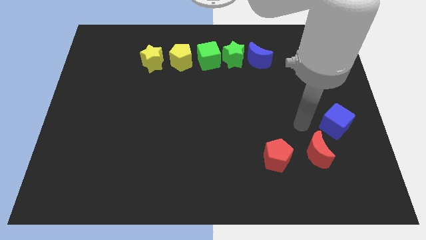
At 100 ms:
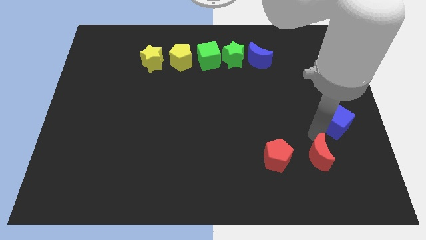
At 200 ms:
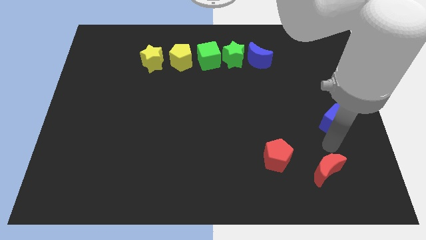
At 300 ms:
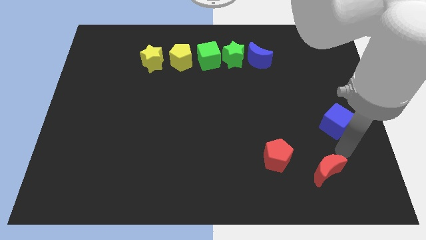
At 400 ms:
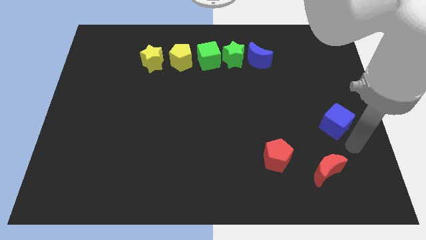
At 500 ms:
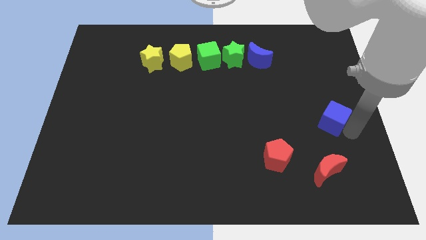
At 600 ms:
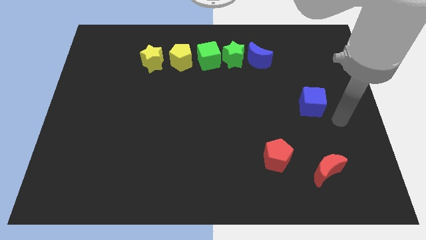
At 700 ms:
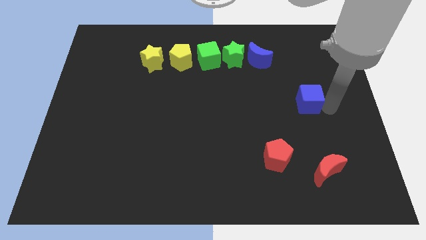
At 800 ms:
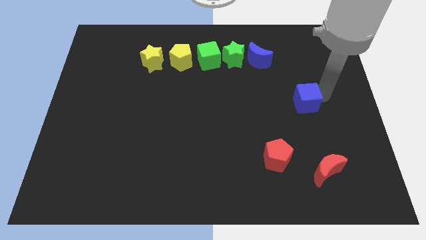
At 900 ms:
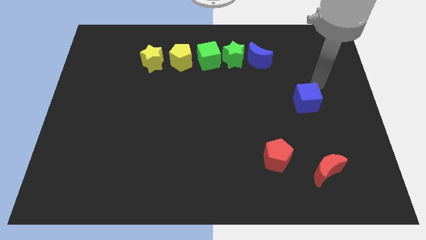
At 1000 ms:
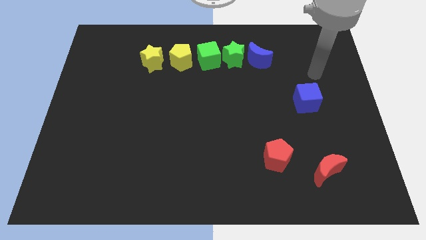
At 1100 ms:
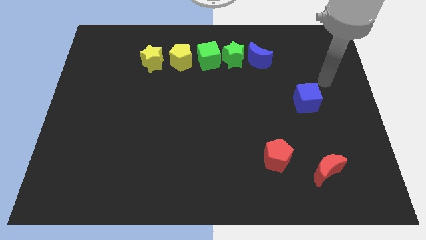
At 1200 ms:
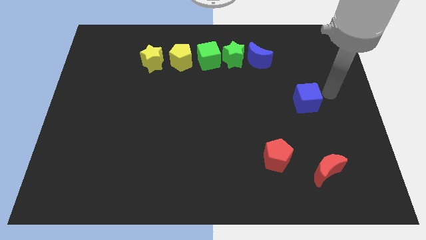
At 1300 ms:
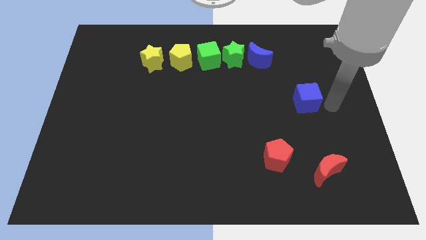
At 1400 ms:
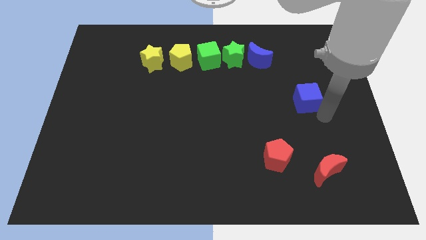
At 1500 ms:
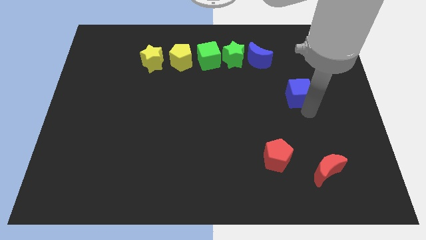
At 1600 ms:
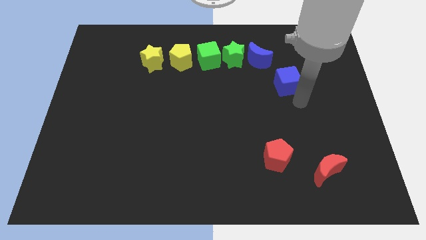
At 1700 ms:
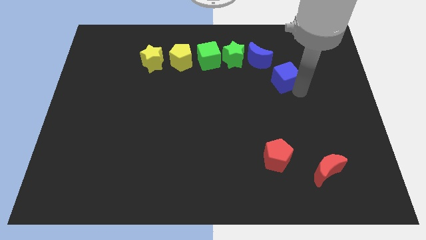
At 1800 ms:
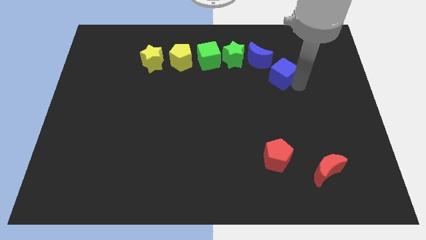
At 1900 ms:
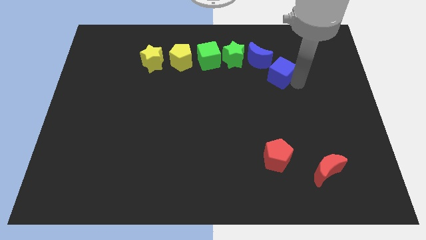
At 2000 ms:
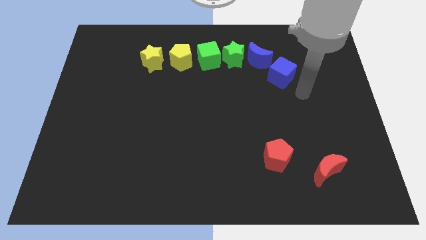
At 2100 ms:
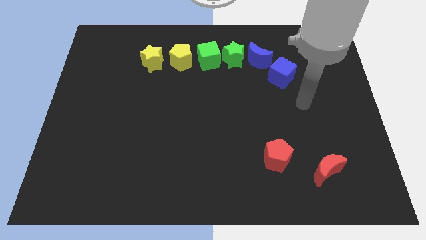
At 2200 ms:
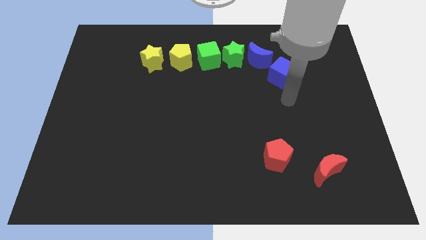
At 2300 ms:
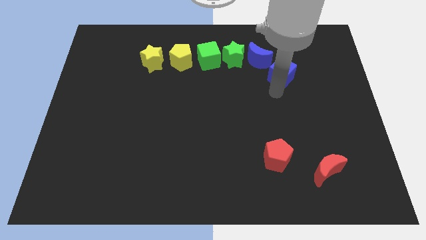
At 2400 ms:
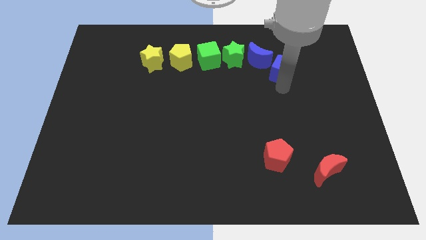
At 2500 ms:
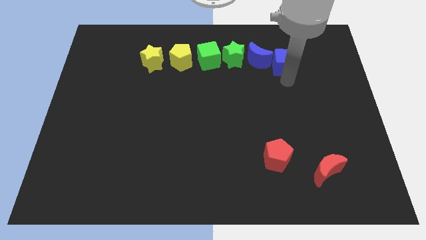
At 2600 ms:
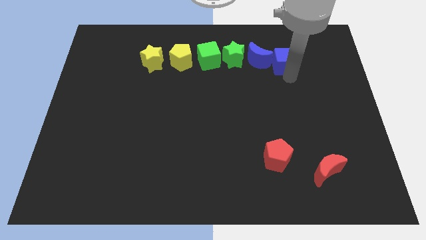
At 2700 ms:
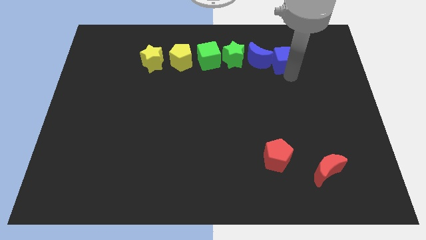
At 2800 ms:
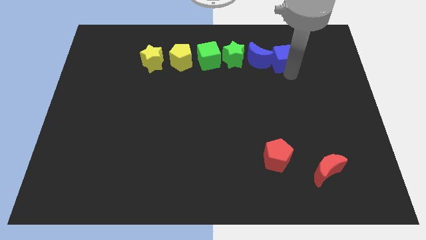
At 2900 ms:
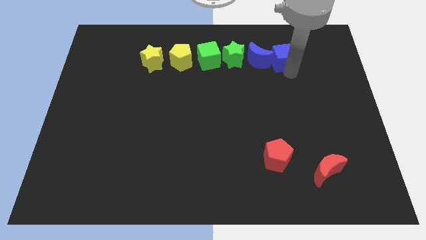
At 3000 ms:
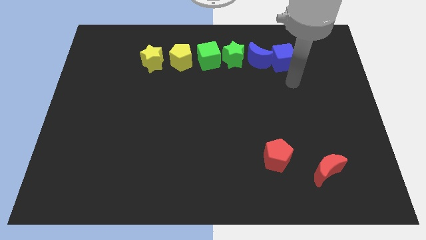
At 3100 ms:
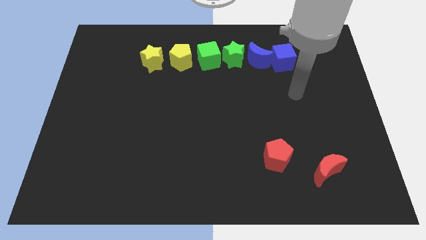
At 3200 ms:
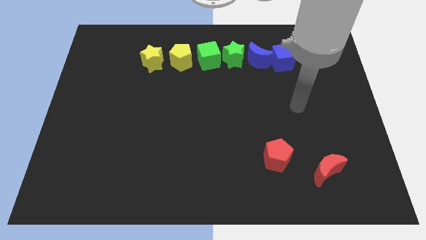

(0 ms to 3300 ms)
push the blue cube into the right of the blue moon

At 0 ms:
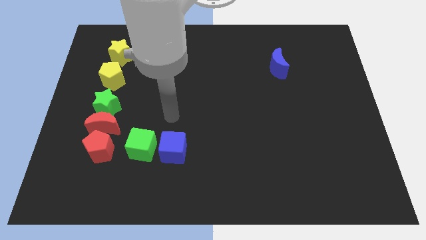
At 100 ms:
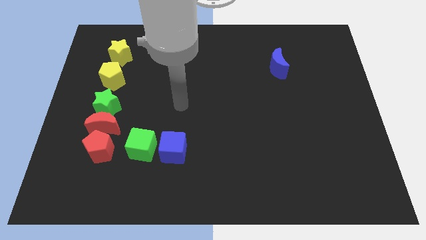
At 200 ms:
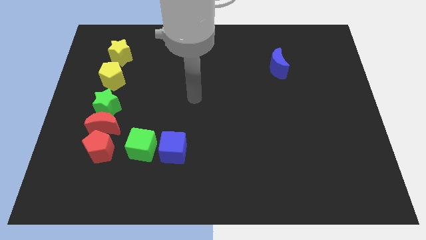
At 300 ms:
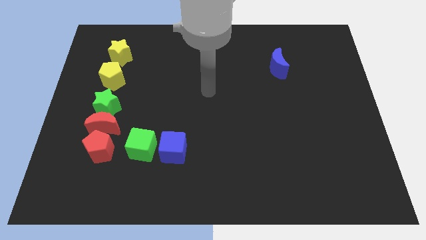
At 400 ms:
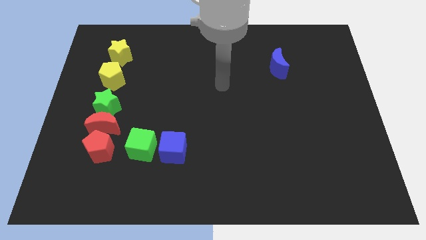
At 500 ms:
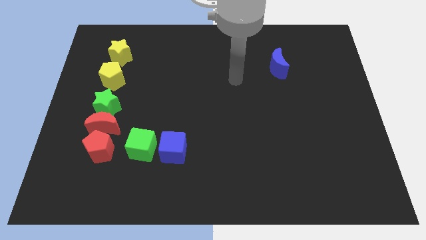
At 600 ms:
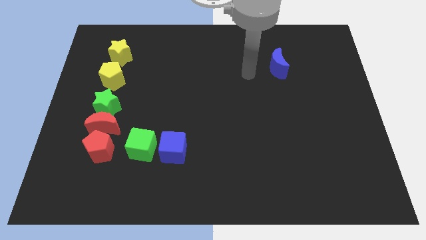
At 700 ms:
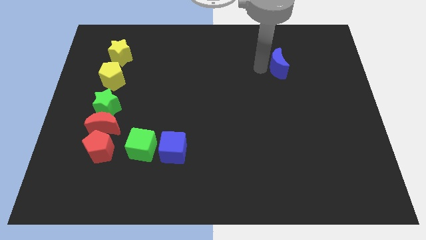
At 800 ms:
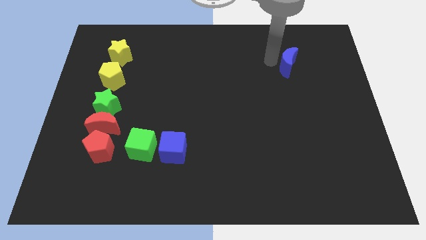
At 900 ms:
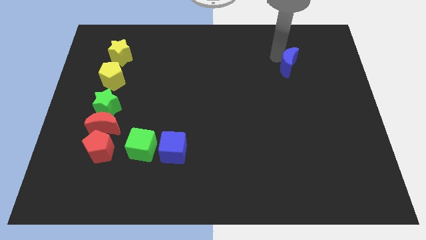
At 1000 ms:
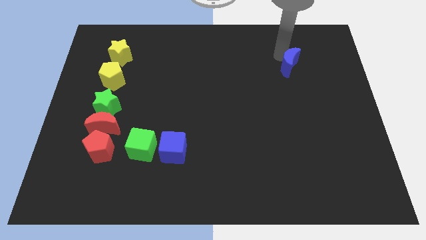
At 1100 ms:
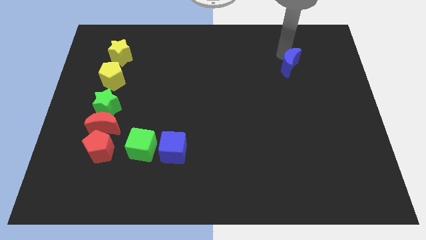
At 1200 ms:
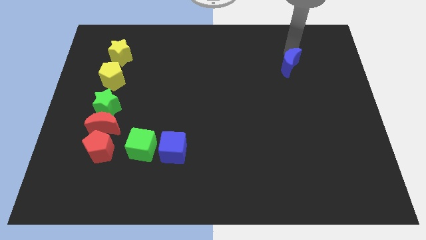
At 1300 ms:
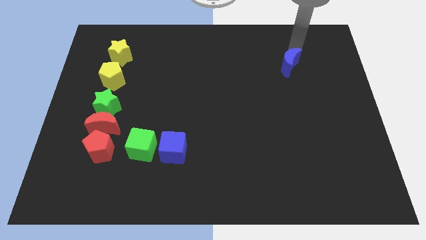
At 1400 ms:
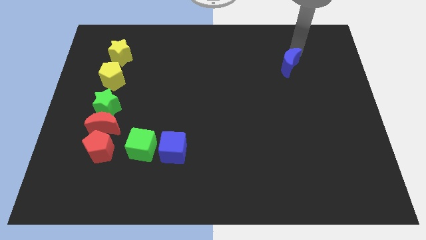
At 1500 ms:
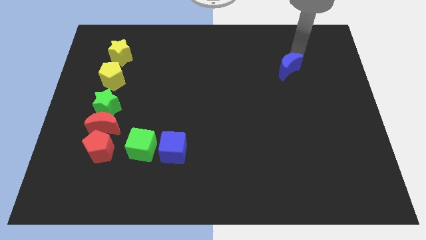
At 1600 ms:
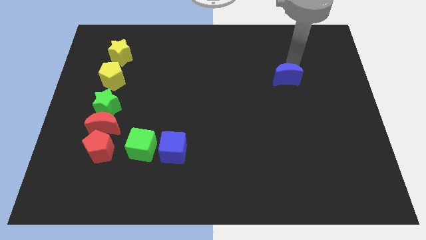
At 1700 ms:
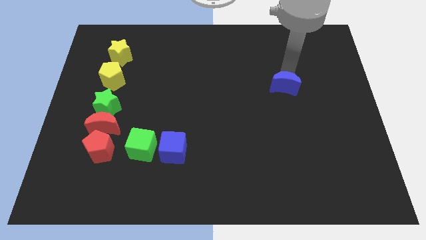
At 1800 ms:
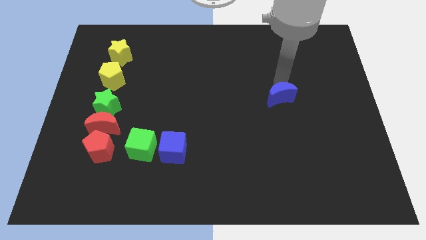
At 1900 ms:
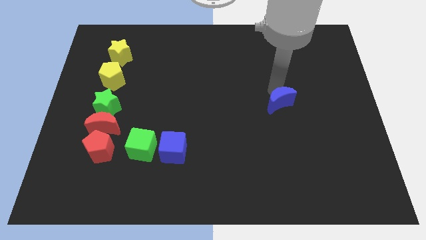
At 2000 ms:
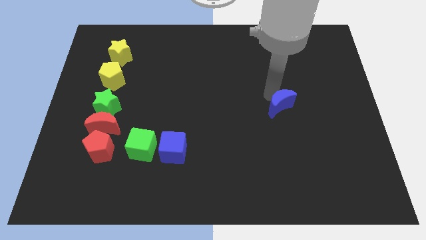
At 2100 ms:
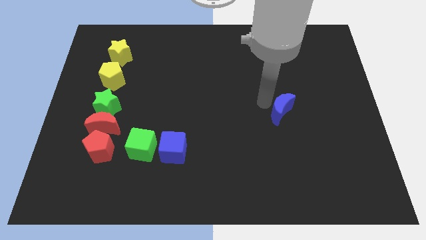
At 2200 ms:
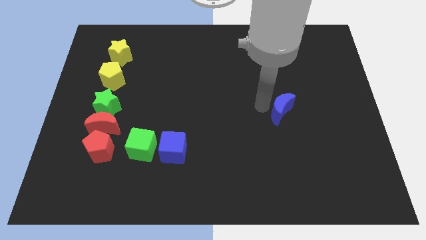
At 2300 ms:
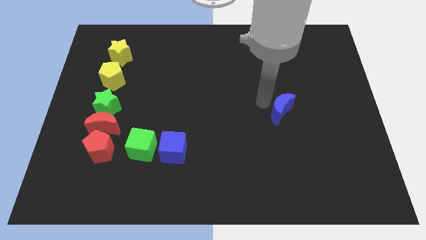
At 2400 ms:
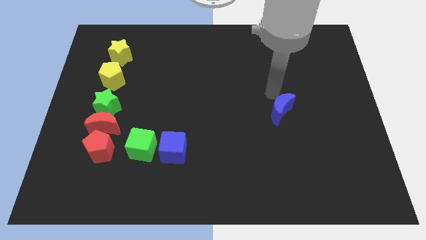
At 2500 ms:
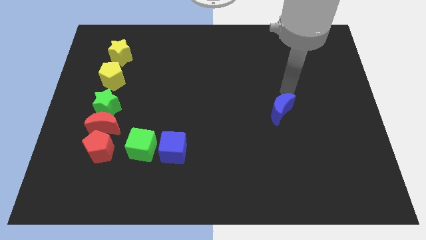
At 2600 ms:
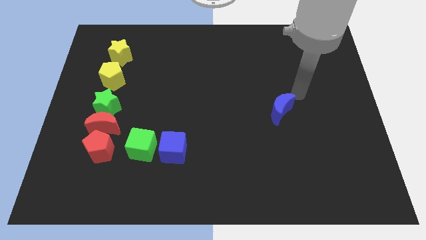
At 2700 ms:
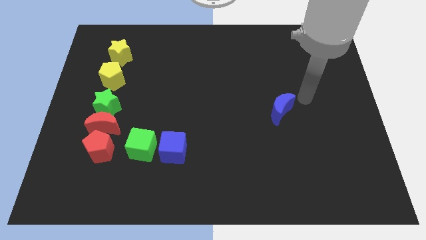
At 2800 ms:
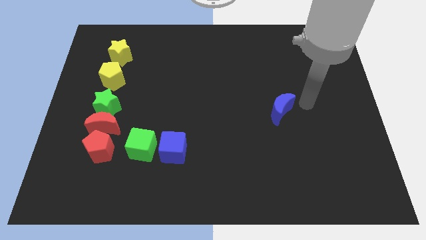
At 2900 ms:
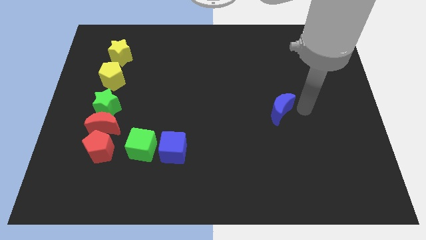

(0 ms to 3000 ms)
move your arm close to the blue moon

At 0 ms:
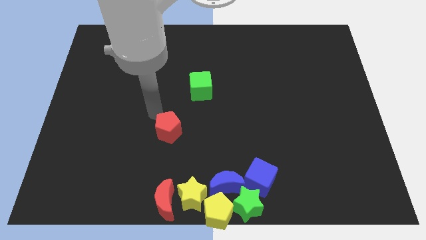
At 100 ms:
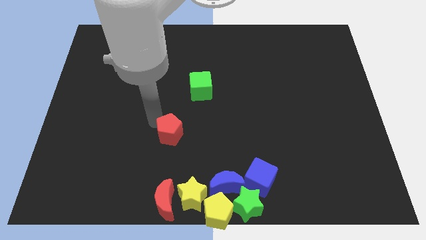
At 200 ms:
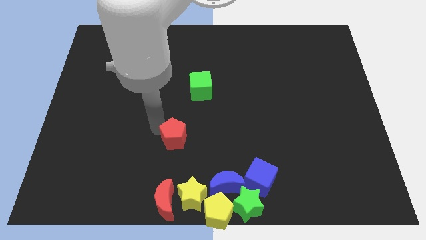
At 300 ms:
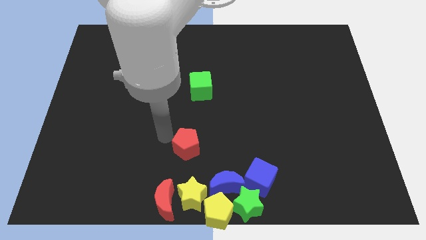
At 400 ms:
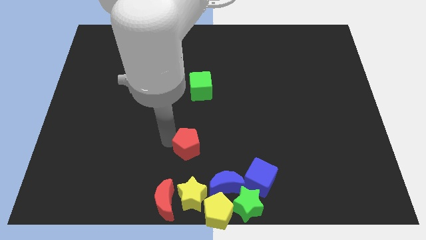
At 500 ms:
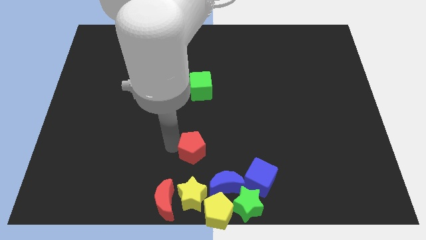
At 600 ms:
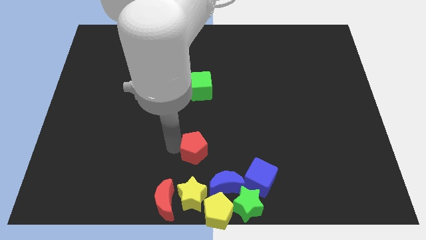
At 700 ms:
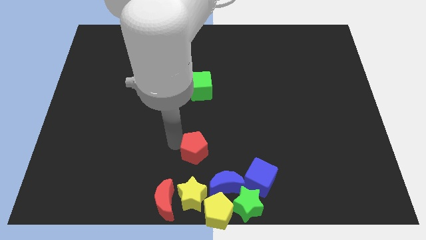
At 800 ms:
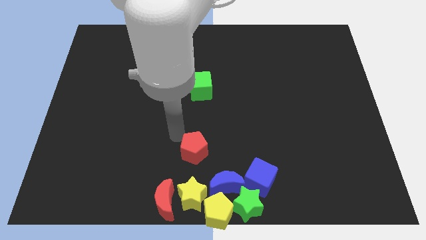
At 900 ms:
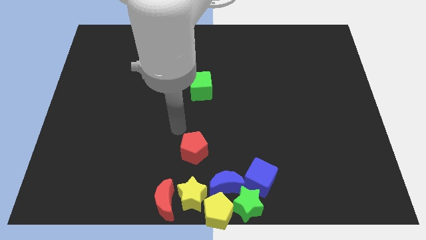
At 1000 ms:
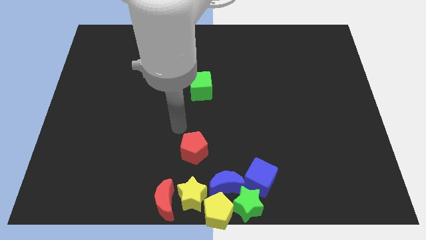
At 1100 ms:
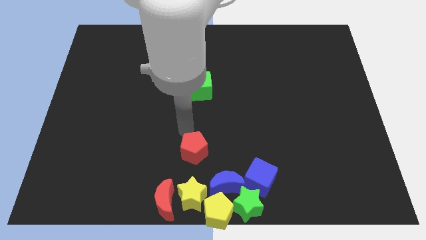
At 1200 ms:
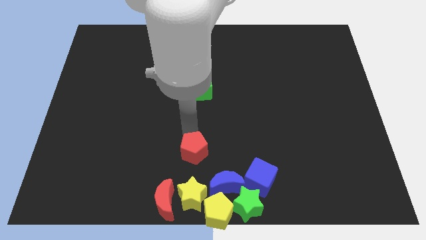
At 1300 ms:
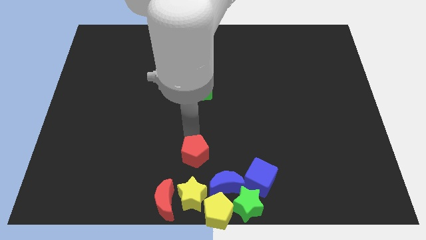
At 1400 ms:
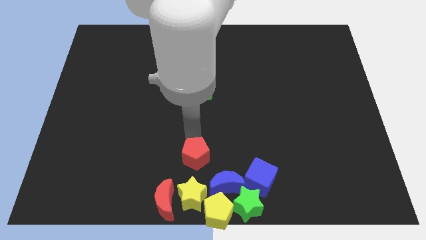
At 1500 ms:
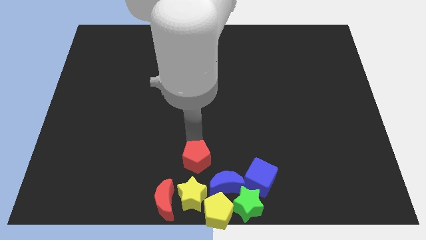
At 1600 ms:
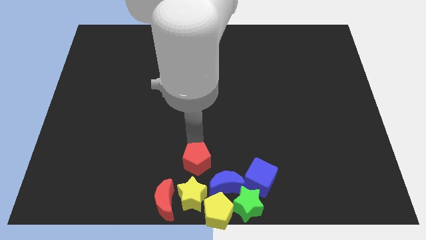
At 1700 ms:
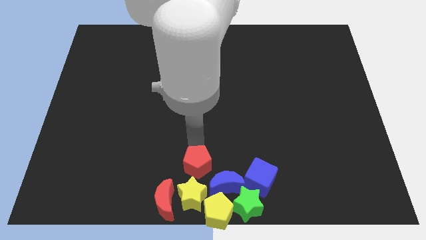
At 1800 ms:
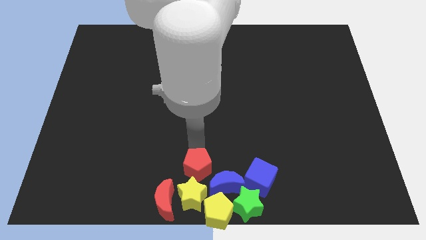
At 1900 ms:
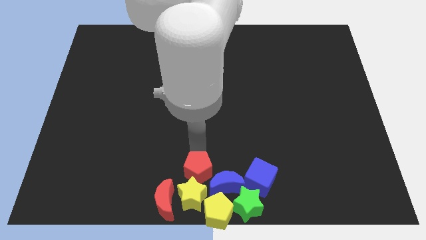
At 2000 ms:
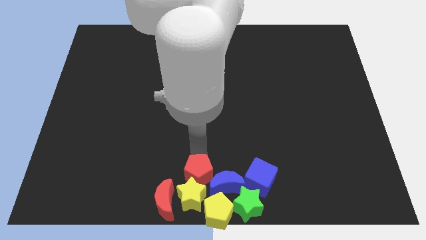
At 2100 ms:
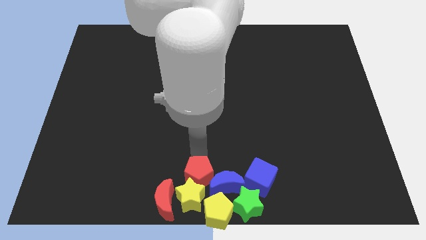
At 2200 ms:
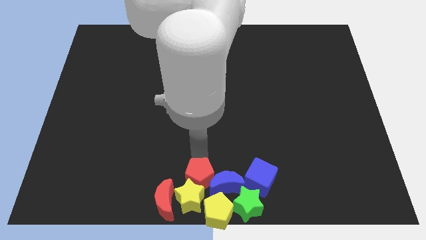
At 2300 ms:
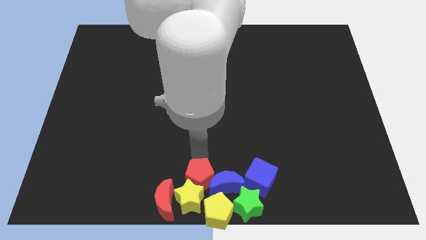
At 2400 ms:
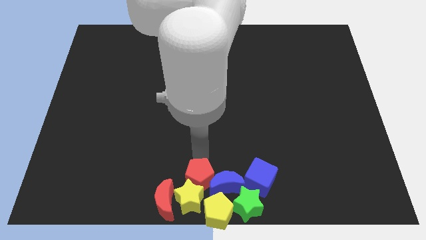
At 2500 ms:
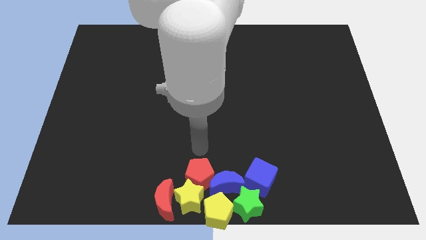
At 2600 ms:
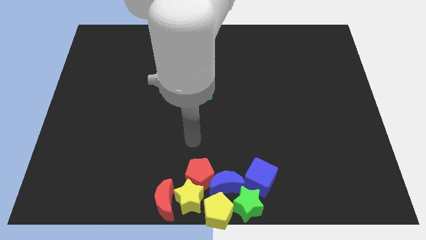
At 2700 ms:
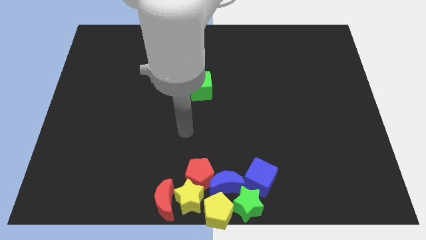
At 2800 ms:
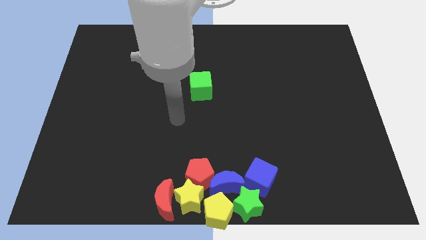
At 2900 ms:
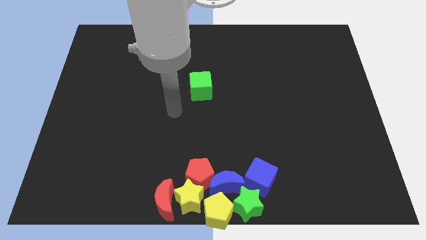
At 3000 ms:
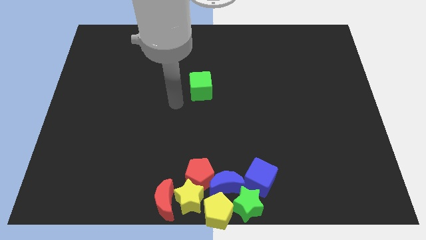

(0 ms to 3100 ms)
place red pentagon above the yellow star
